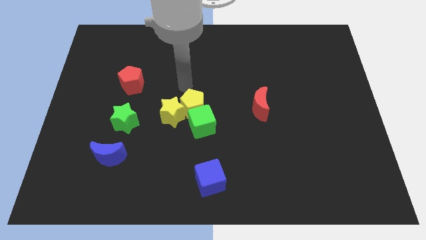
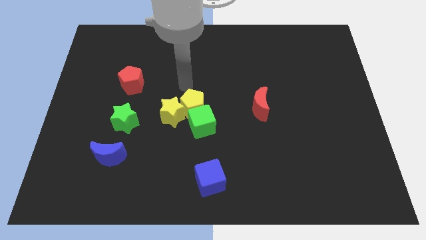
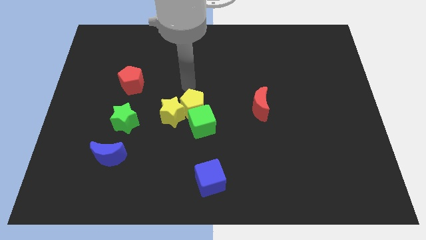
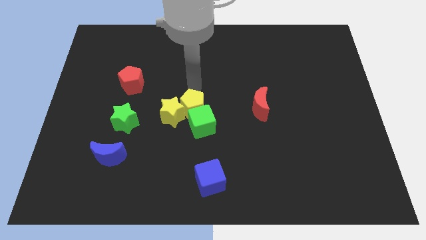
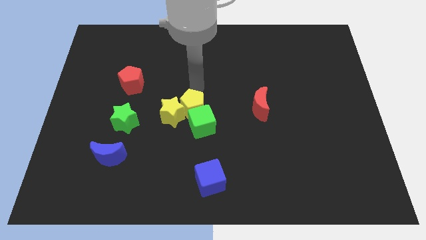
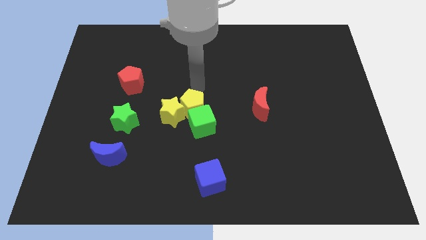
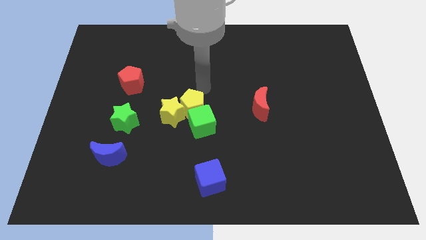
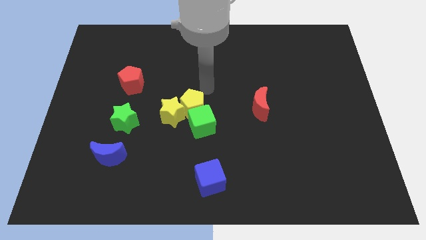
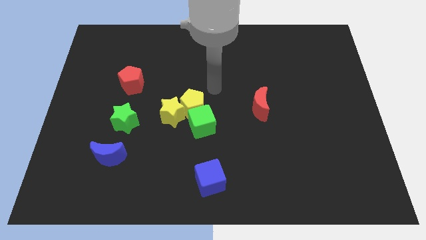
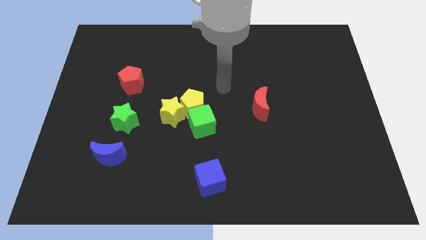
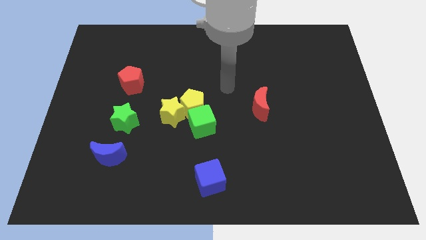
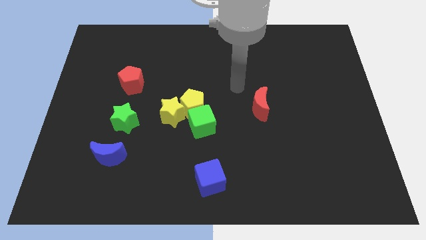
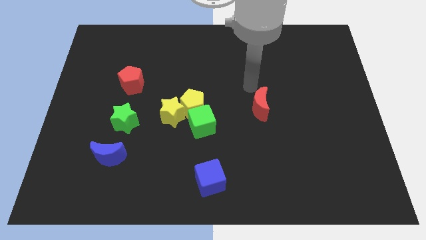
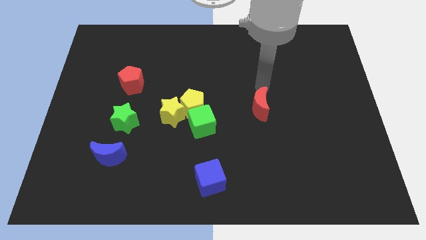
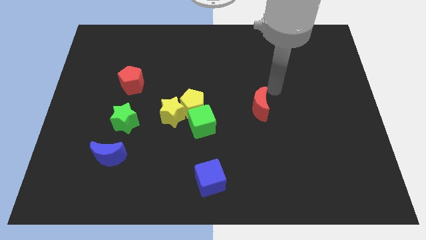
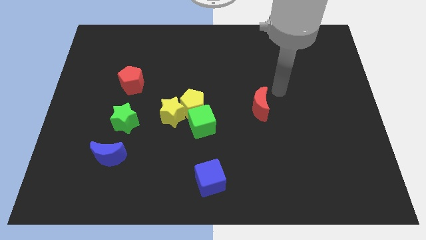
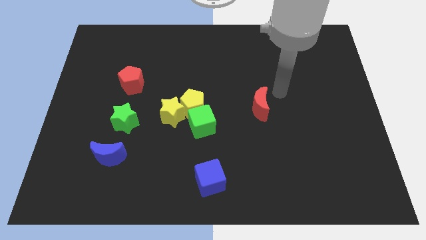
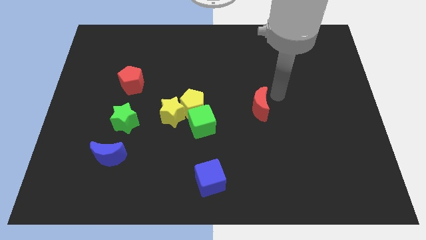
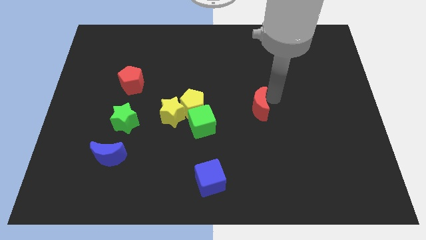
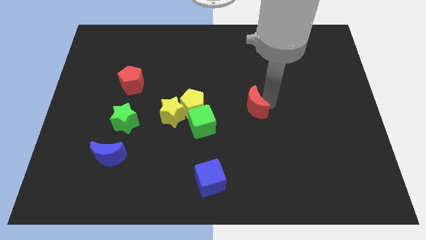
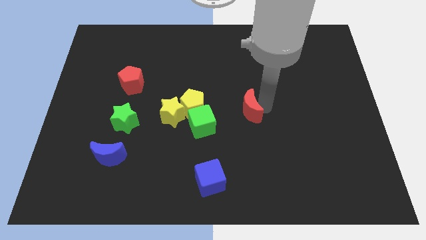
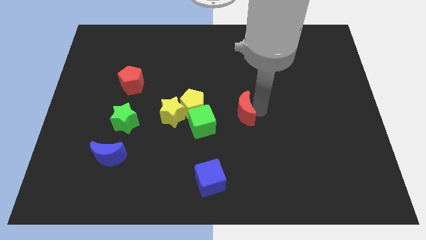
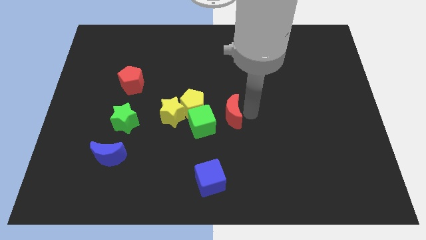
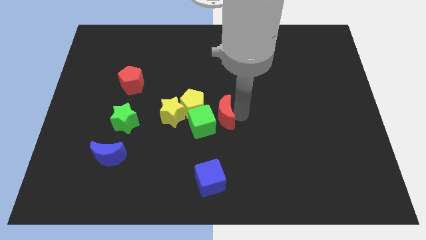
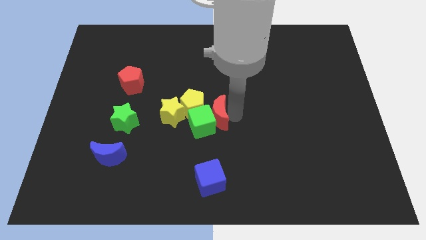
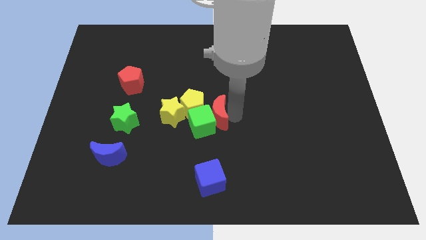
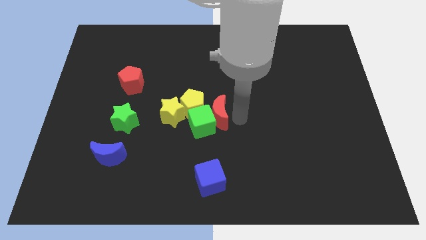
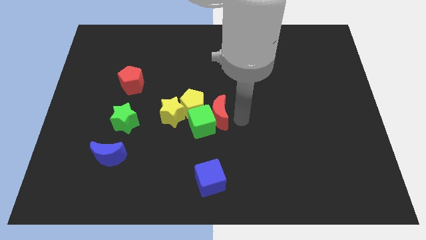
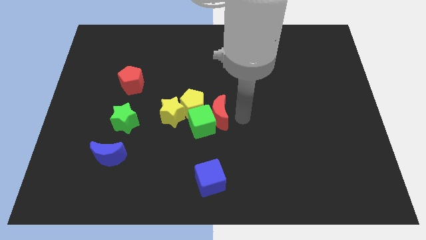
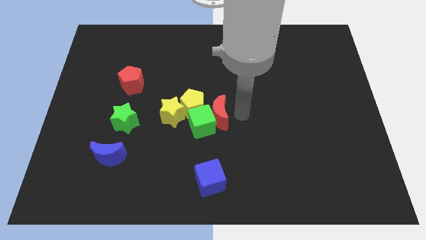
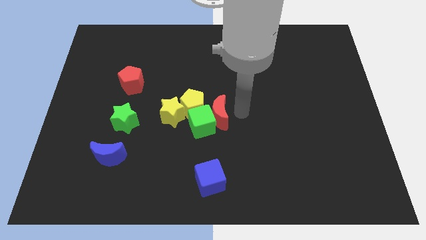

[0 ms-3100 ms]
move the red crescent towards the right side of the green cube

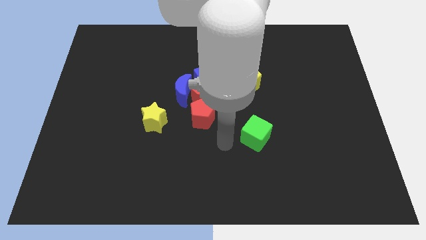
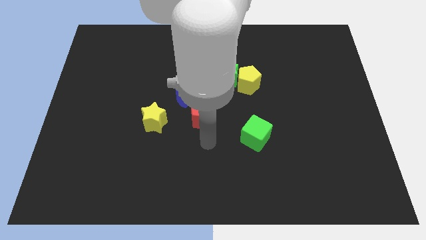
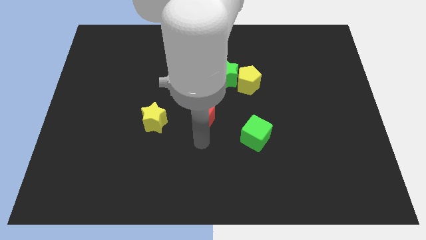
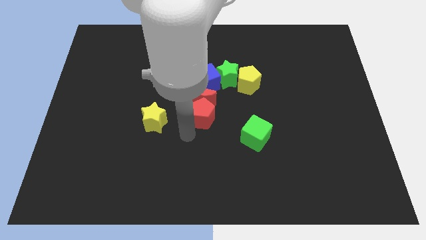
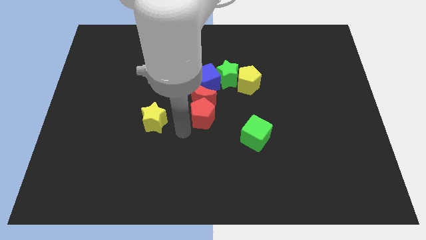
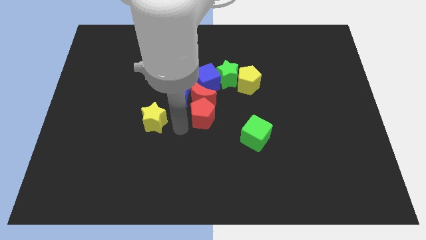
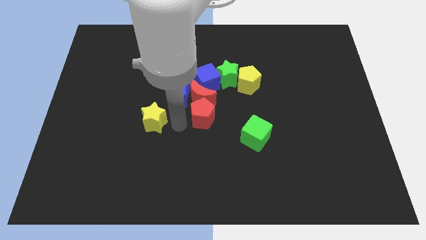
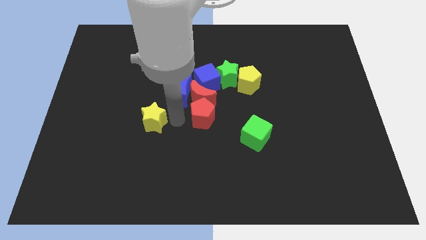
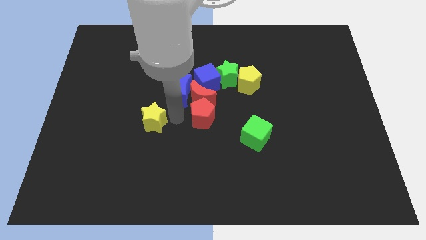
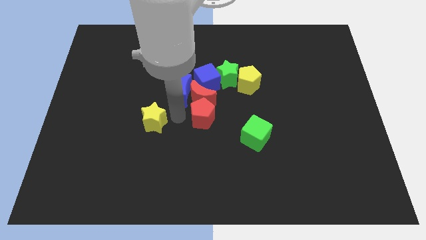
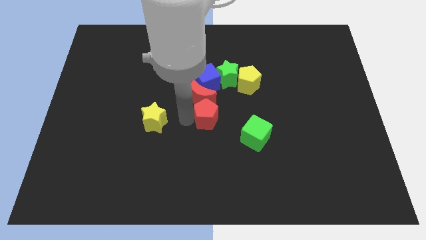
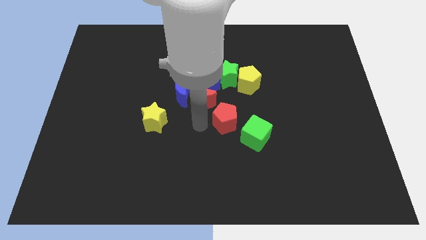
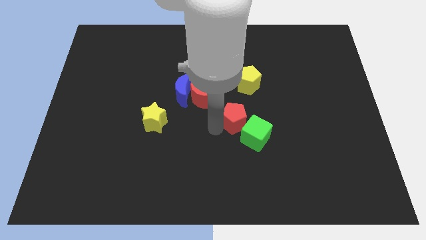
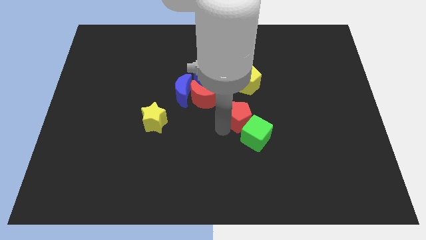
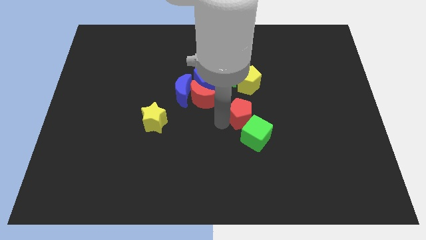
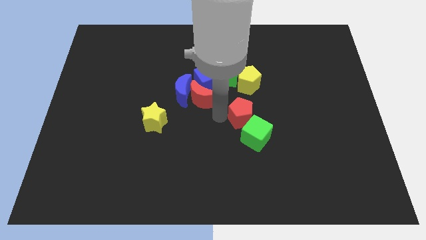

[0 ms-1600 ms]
separate red pentagon from the red moon

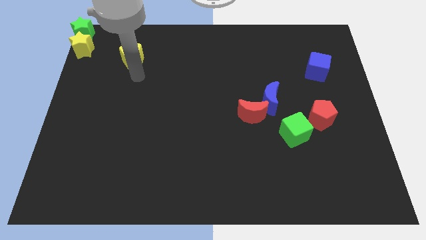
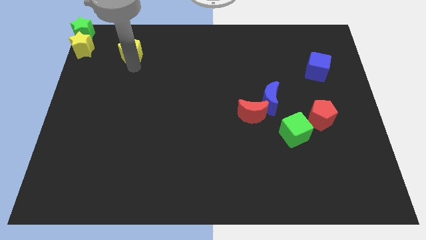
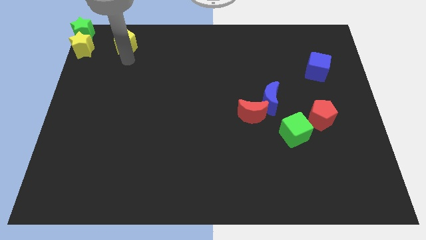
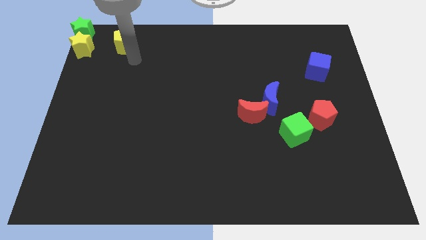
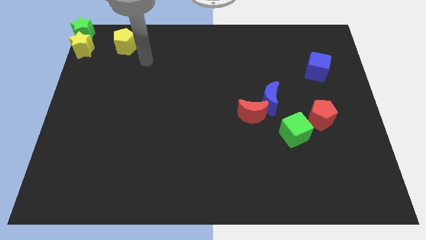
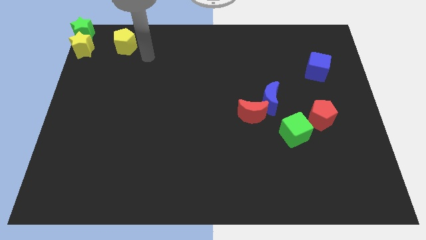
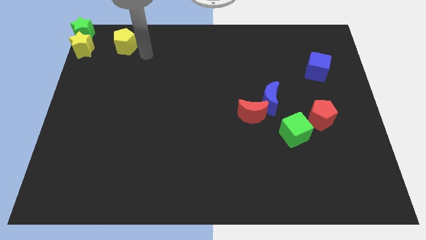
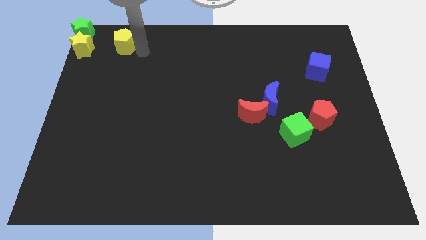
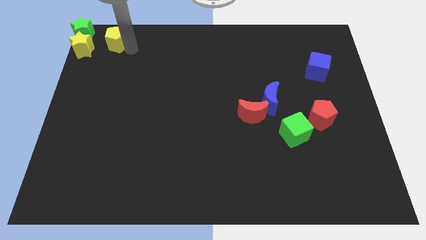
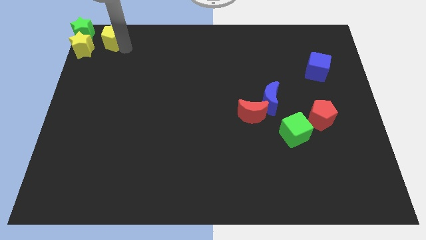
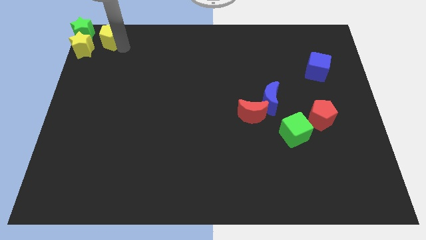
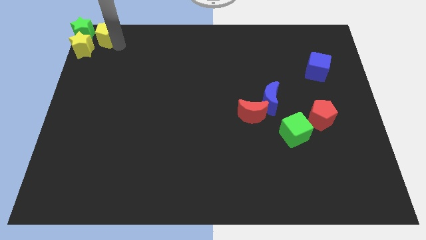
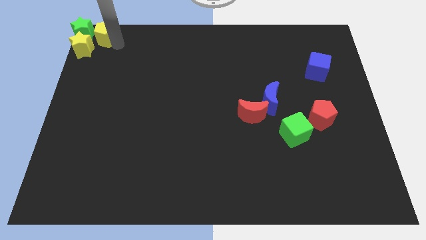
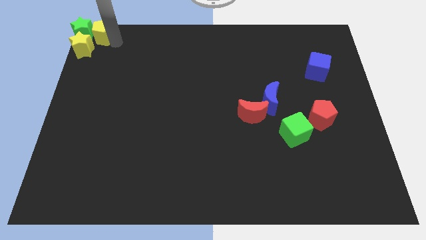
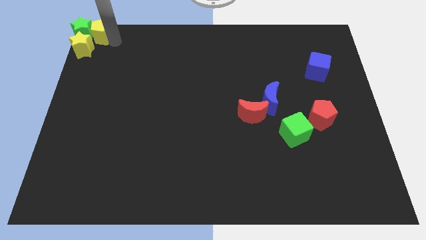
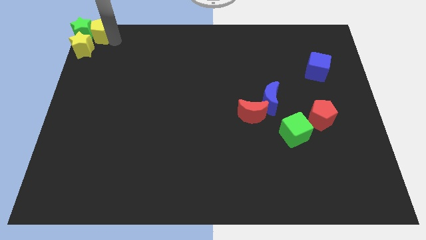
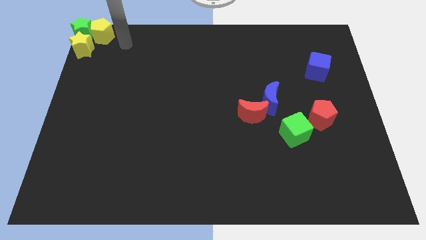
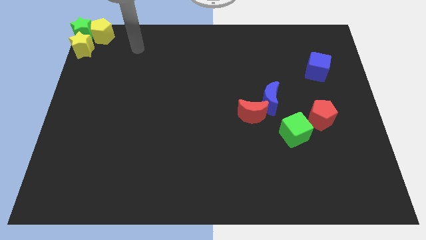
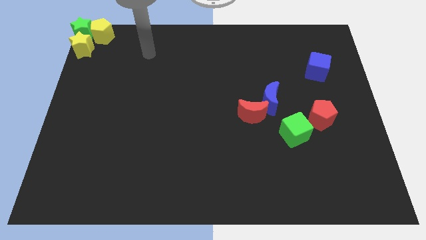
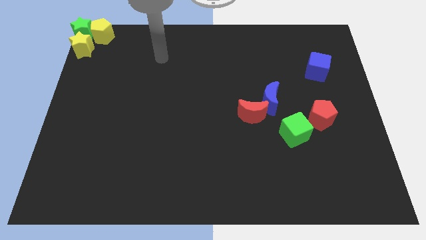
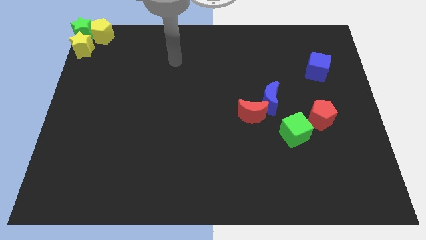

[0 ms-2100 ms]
push yellow pentagon to the top left

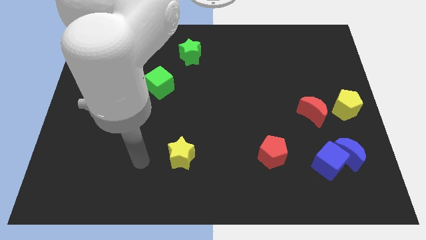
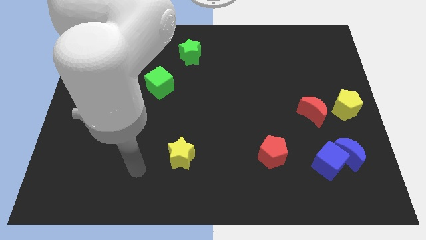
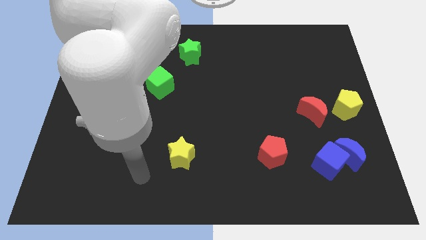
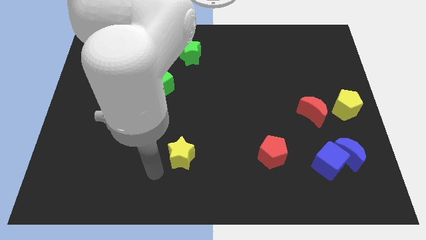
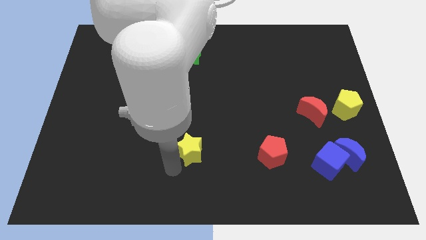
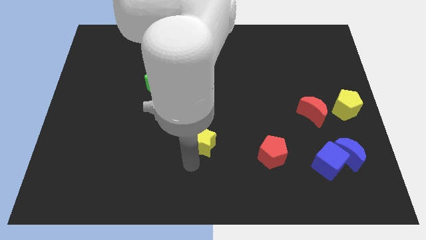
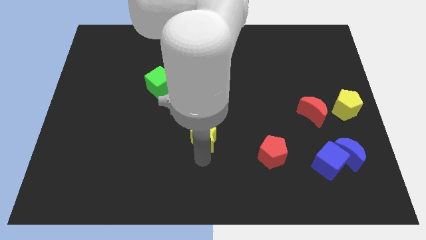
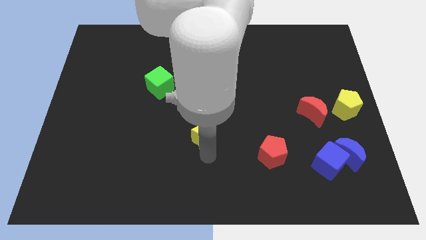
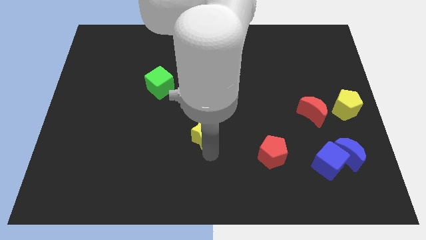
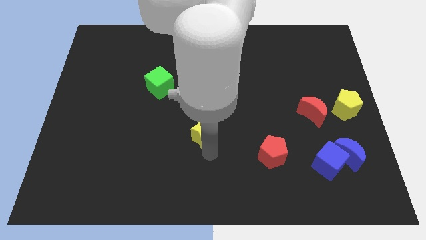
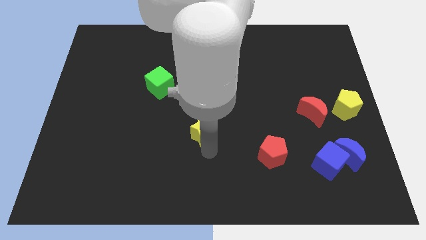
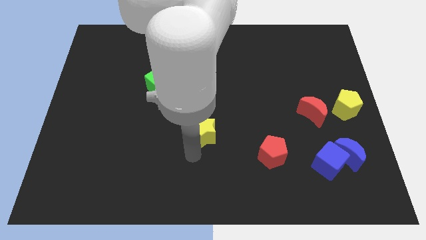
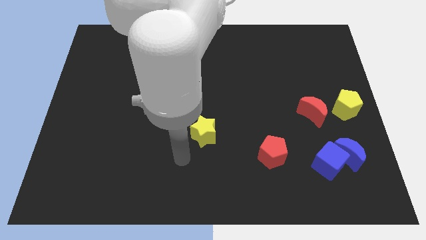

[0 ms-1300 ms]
place the yellow star in between the green cube and red pentagon

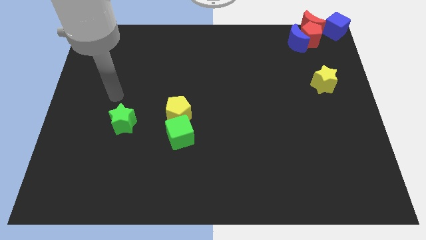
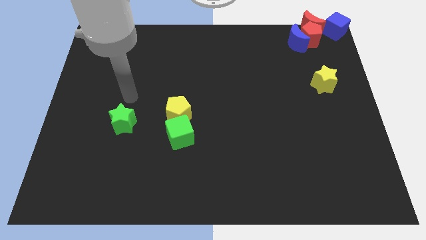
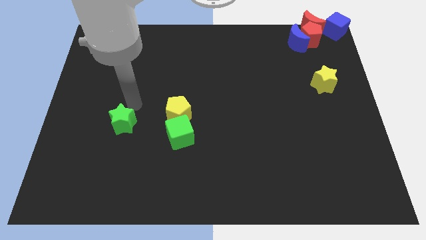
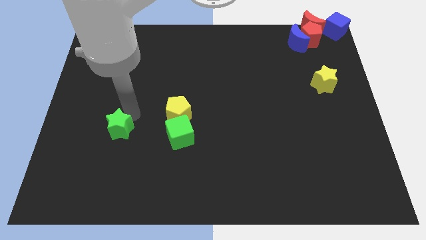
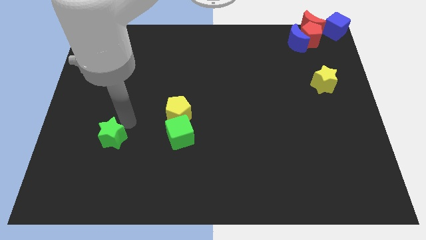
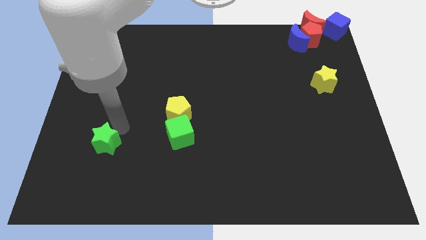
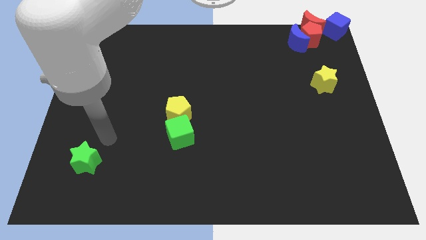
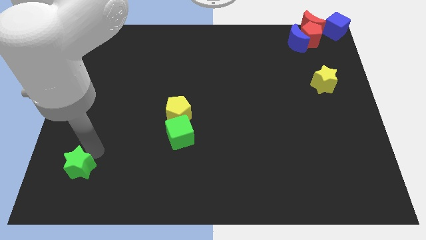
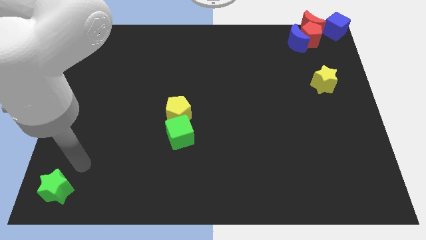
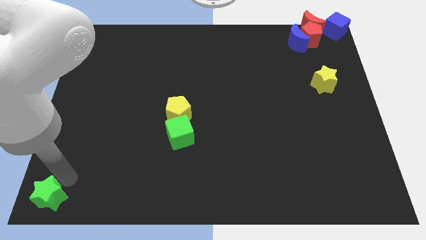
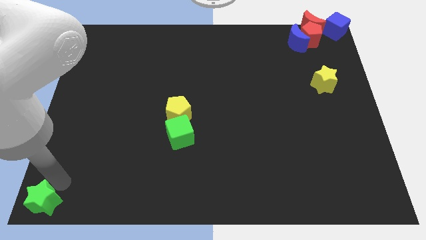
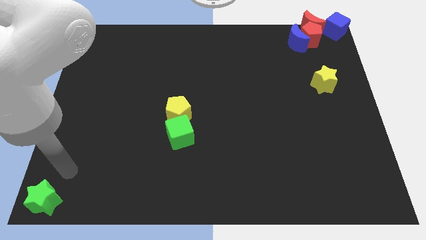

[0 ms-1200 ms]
push the green star to the left bottom of the board
